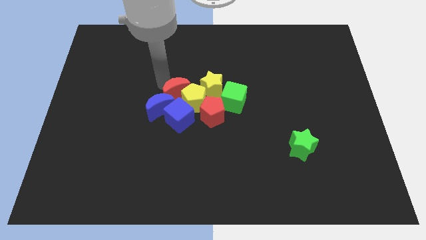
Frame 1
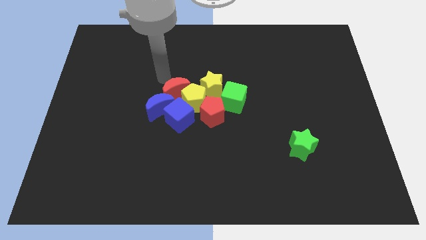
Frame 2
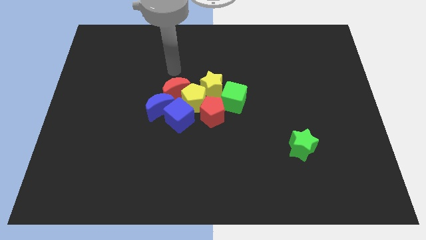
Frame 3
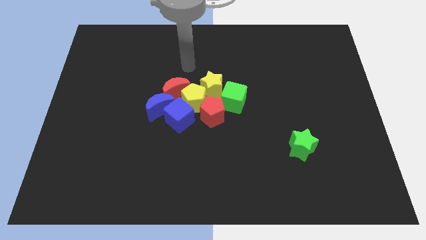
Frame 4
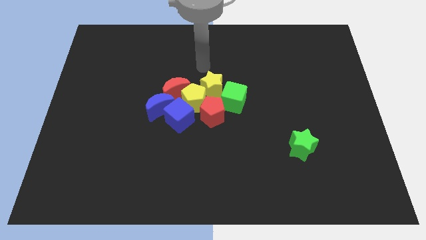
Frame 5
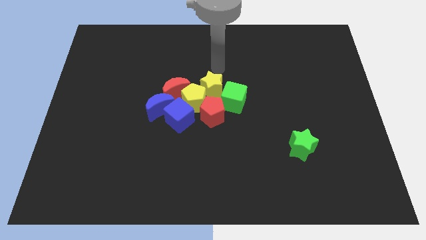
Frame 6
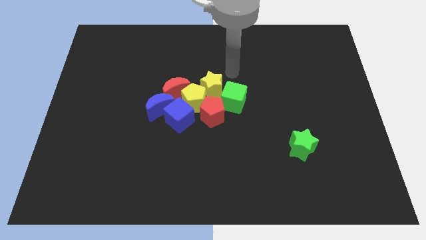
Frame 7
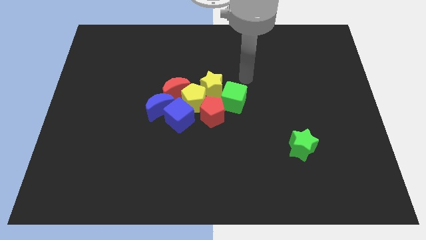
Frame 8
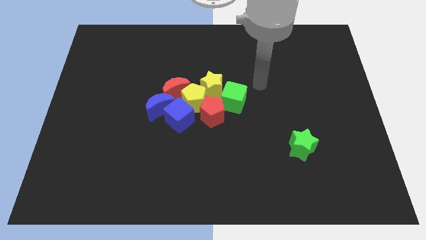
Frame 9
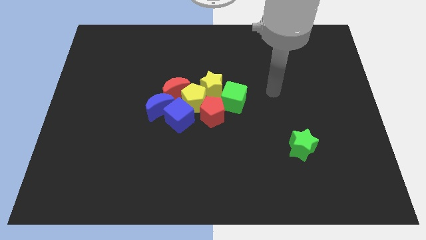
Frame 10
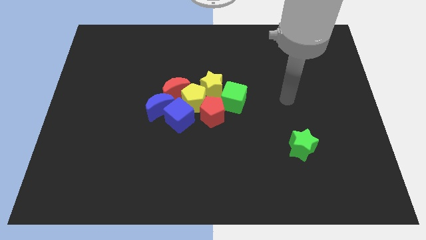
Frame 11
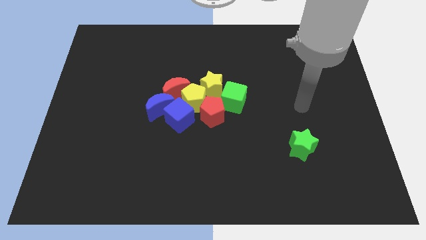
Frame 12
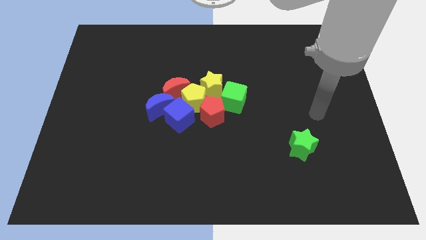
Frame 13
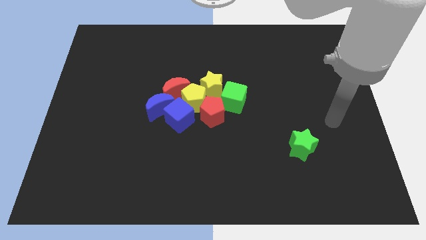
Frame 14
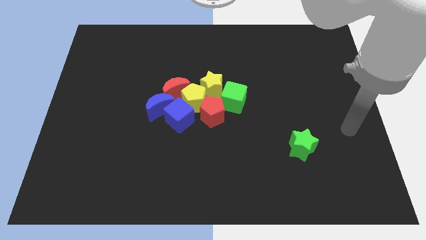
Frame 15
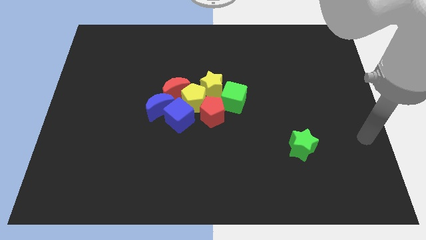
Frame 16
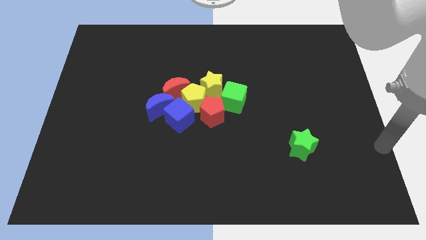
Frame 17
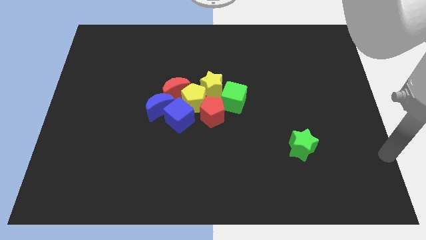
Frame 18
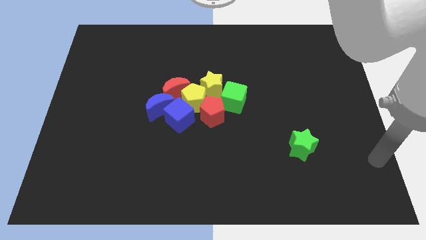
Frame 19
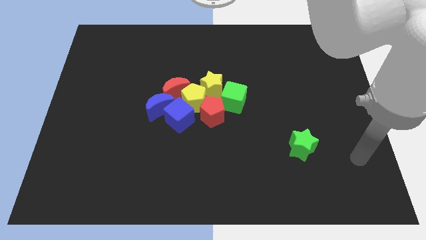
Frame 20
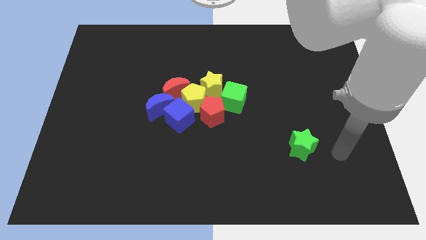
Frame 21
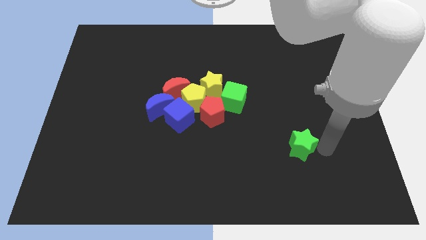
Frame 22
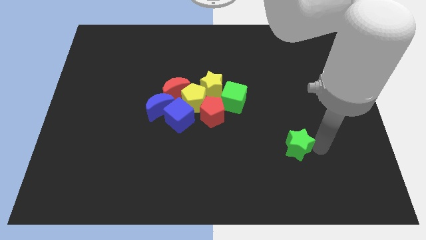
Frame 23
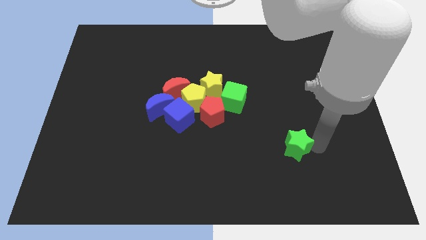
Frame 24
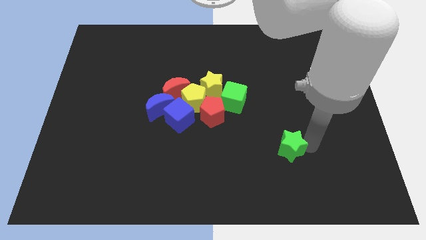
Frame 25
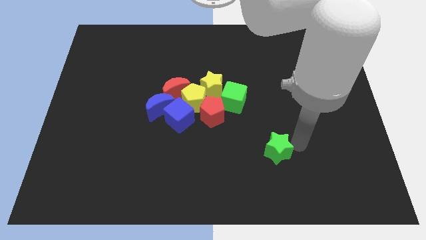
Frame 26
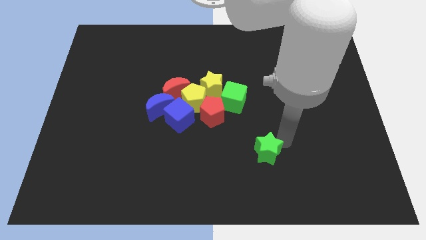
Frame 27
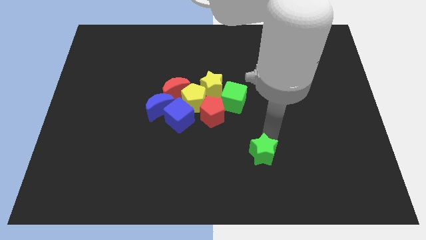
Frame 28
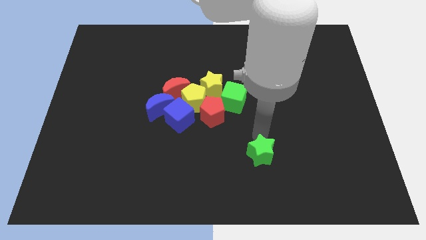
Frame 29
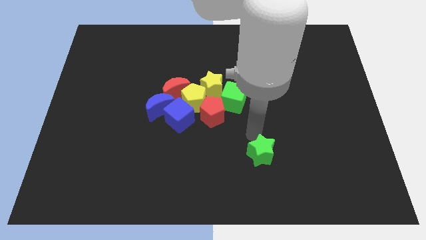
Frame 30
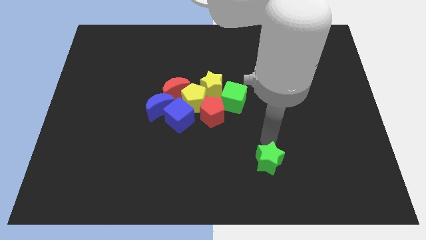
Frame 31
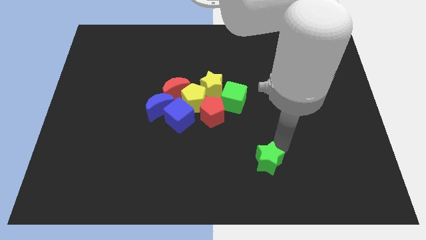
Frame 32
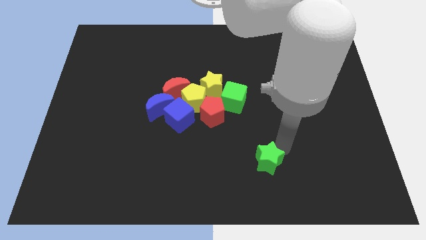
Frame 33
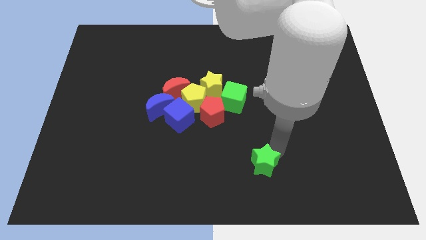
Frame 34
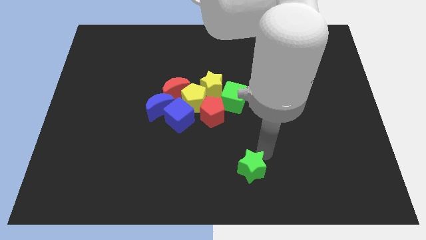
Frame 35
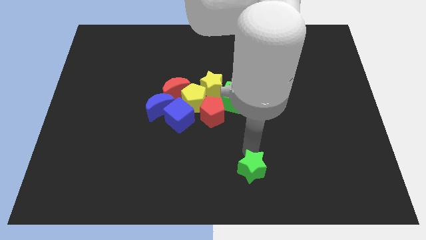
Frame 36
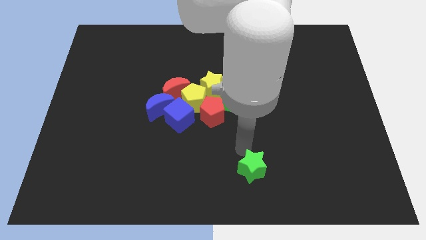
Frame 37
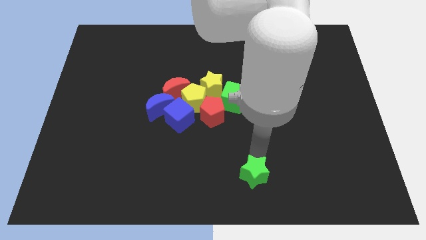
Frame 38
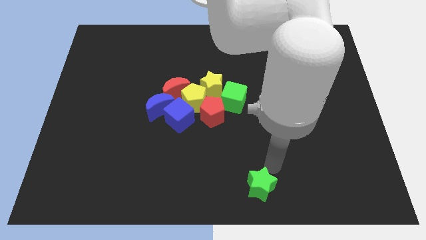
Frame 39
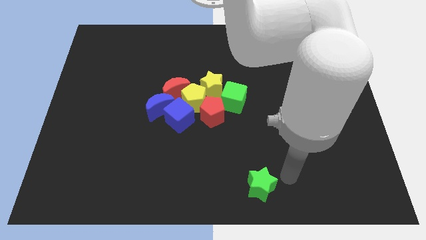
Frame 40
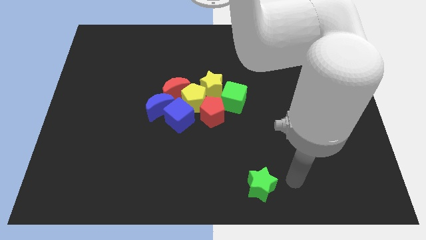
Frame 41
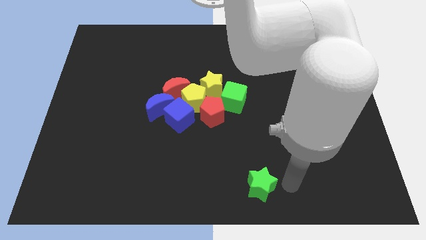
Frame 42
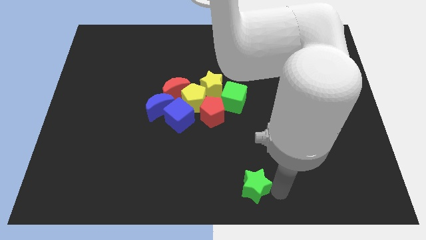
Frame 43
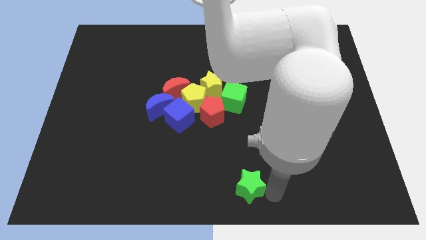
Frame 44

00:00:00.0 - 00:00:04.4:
push the green star diagonally below

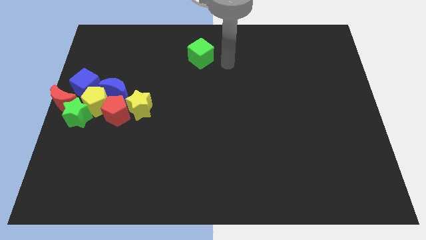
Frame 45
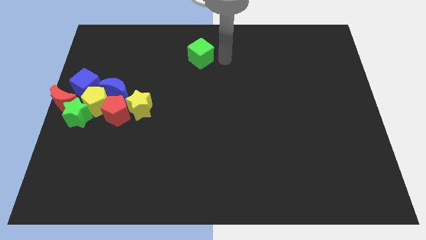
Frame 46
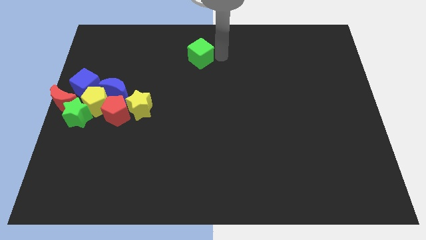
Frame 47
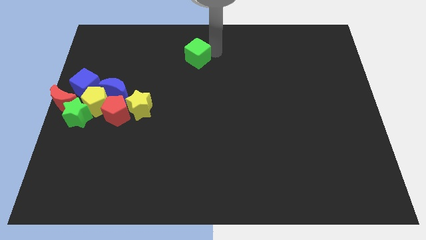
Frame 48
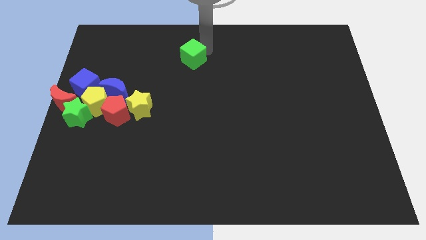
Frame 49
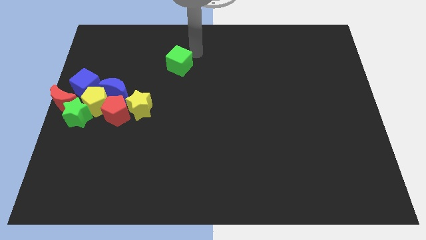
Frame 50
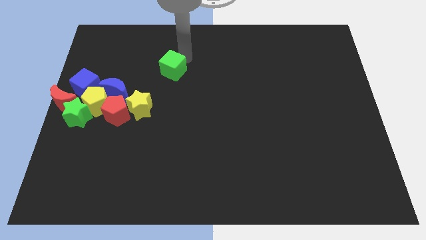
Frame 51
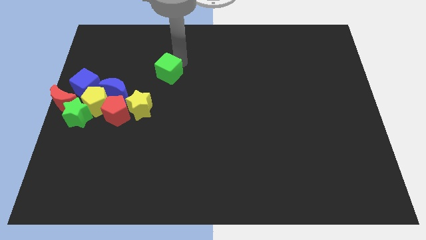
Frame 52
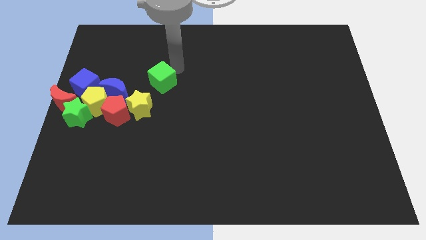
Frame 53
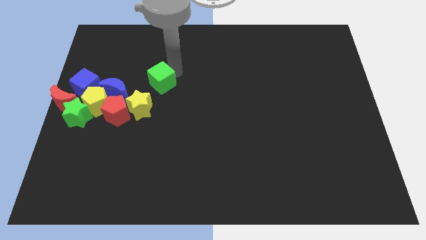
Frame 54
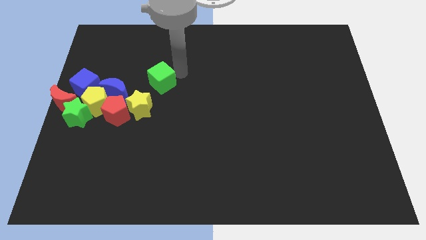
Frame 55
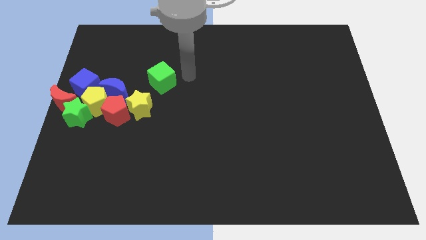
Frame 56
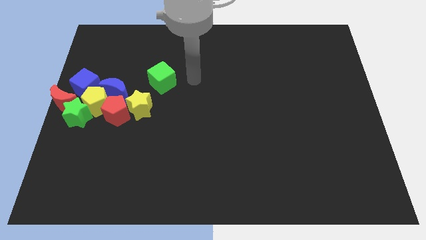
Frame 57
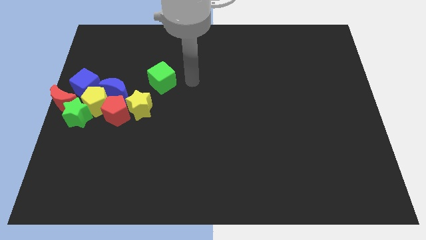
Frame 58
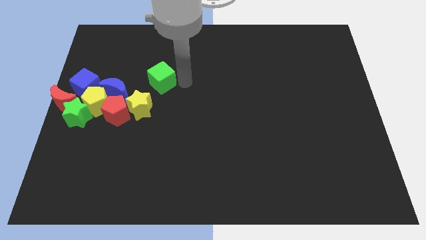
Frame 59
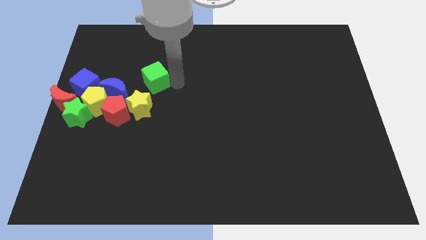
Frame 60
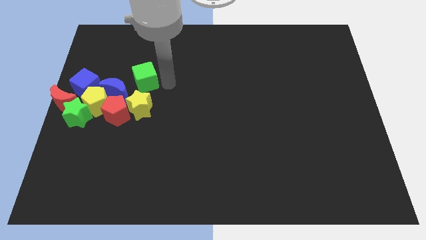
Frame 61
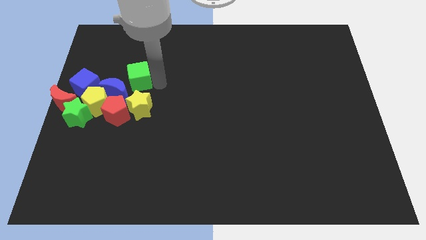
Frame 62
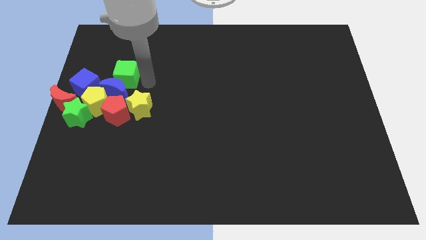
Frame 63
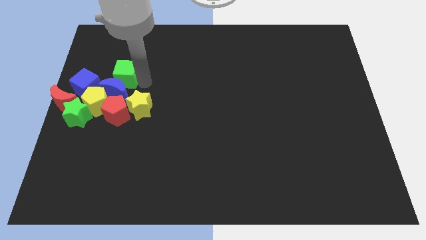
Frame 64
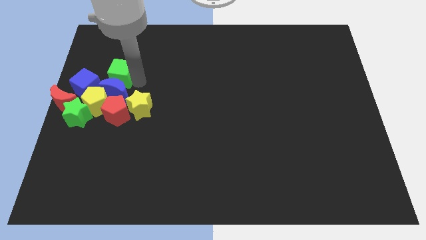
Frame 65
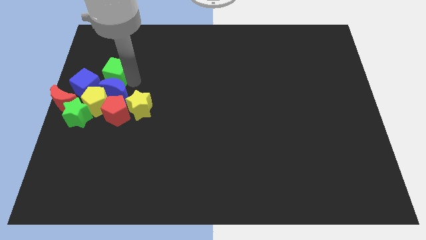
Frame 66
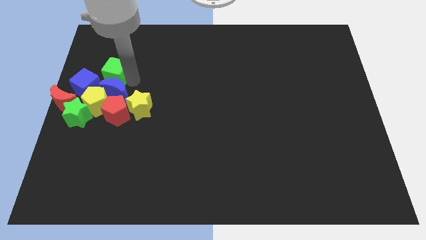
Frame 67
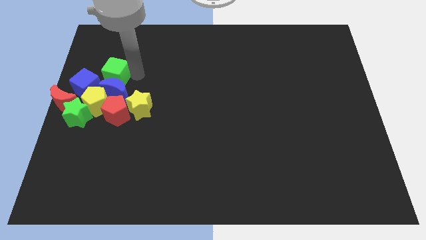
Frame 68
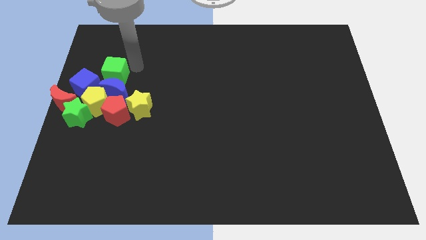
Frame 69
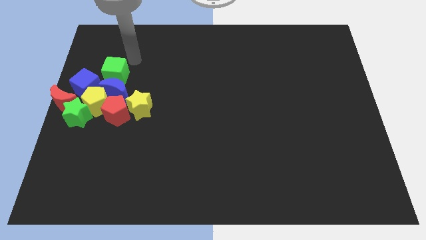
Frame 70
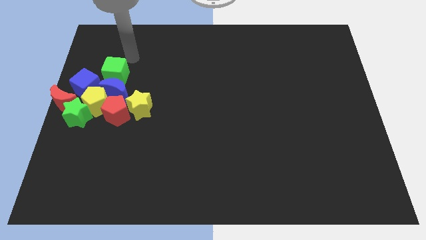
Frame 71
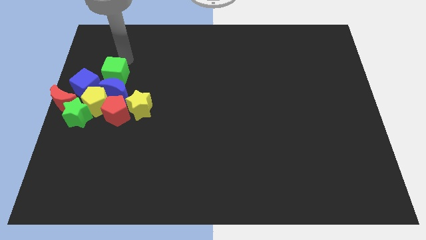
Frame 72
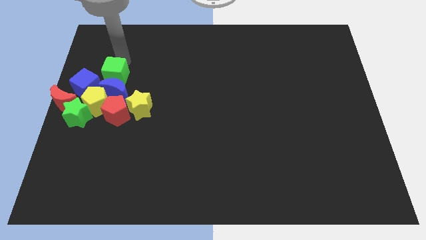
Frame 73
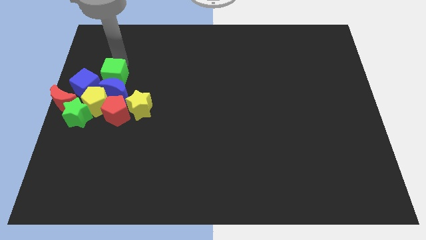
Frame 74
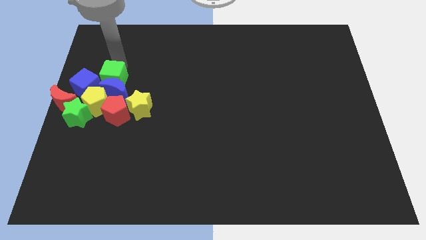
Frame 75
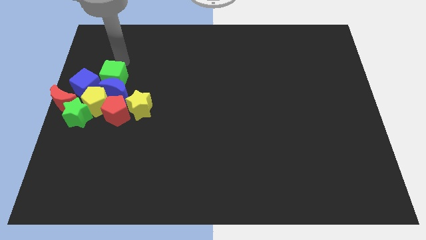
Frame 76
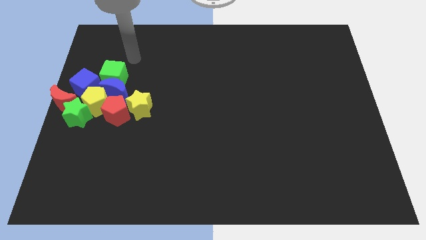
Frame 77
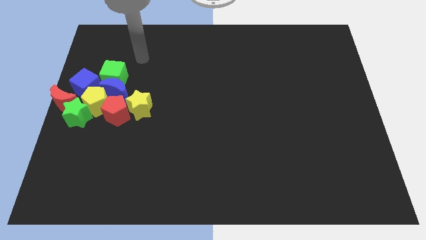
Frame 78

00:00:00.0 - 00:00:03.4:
push the green cube into the group of blocks

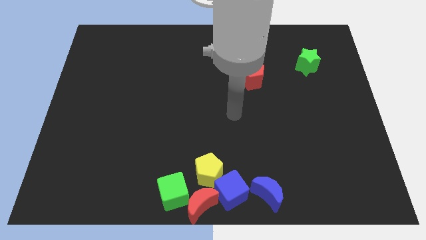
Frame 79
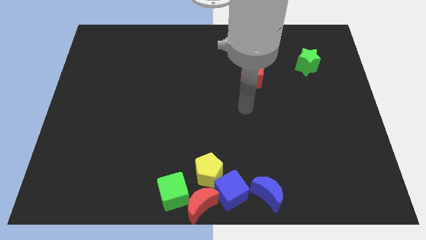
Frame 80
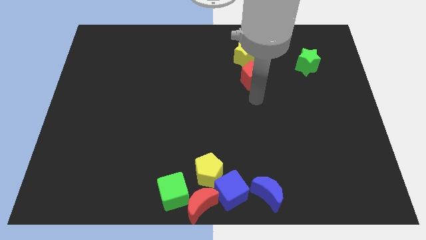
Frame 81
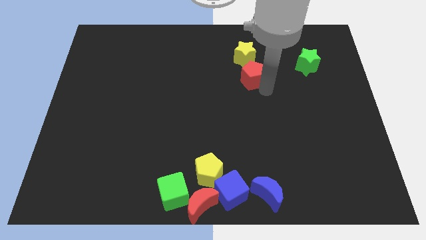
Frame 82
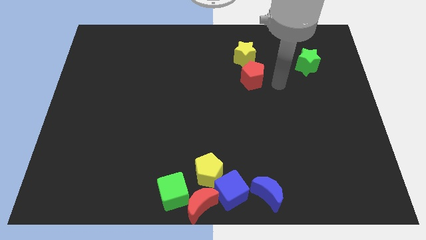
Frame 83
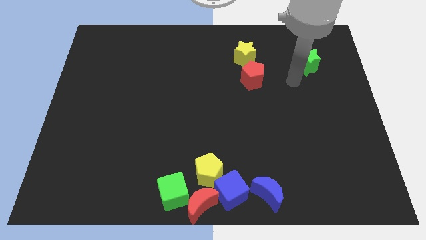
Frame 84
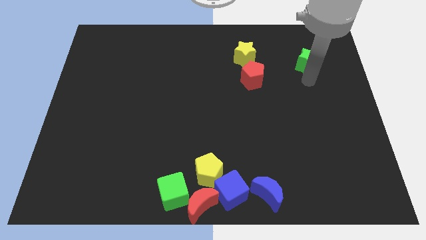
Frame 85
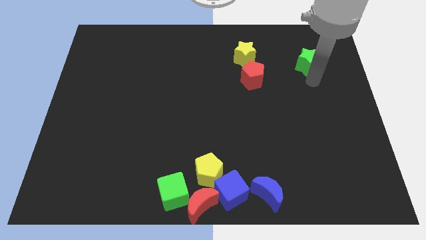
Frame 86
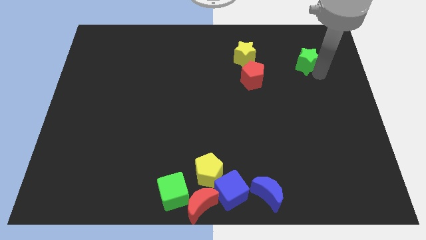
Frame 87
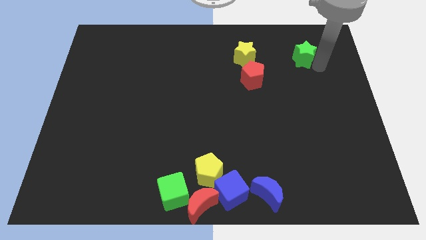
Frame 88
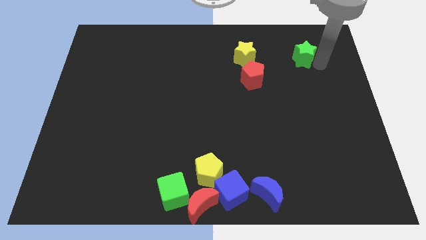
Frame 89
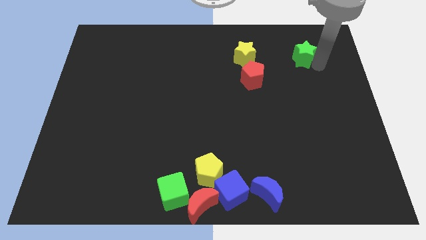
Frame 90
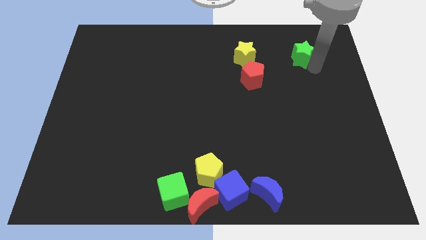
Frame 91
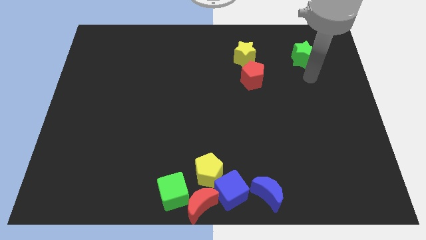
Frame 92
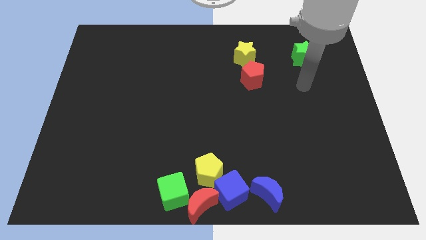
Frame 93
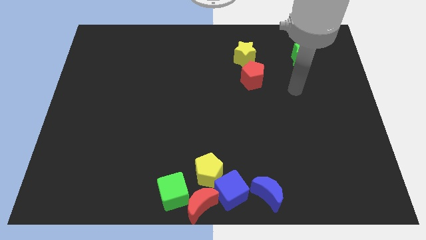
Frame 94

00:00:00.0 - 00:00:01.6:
slightly push the green star upward
